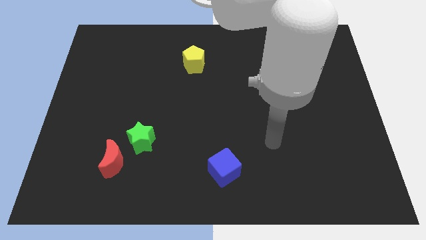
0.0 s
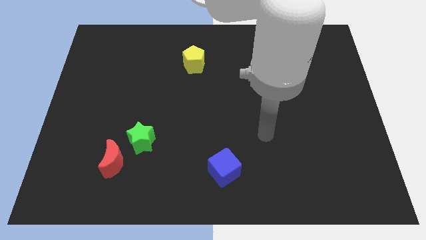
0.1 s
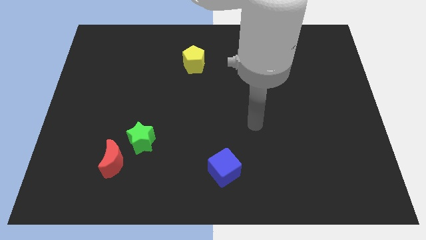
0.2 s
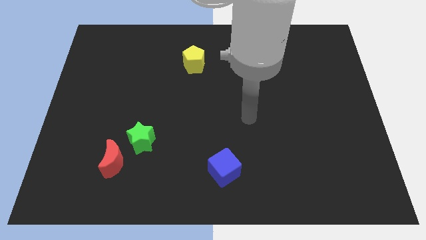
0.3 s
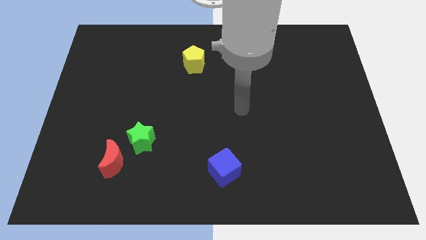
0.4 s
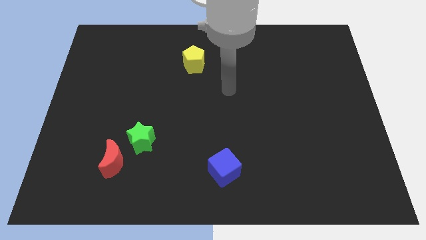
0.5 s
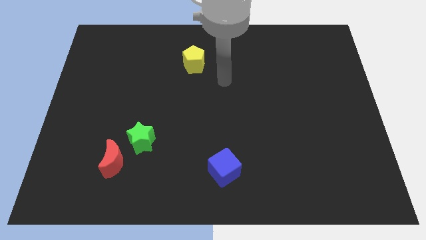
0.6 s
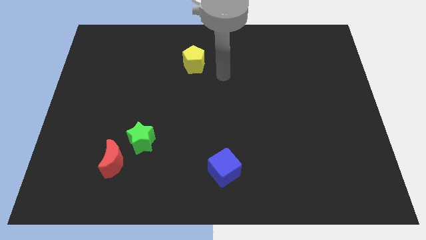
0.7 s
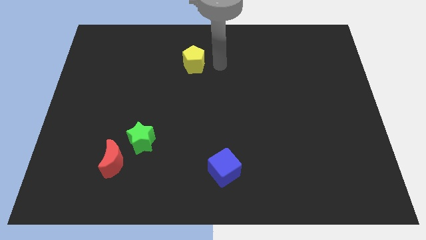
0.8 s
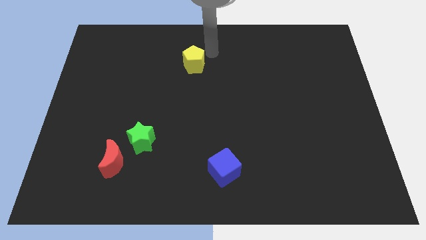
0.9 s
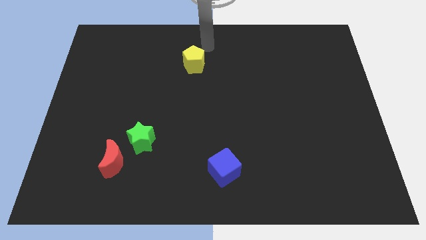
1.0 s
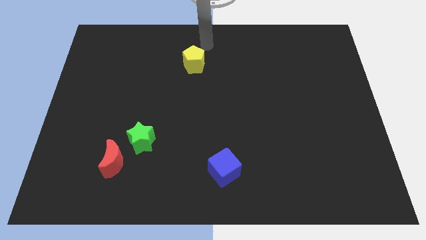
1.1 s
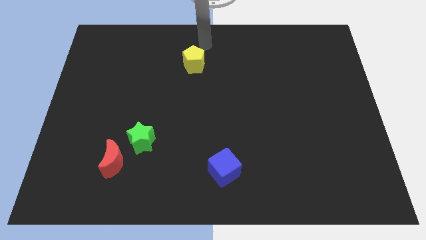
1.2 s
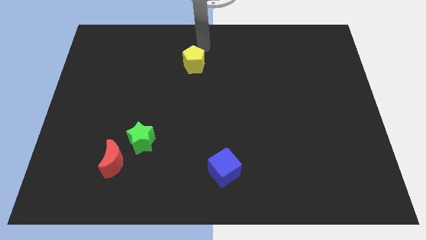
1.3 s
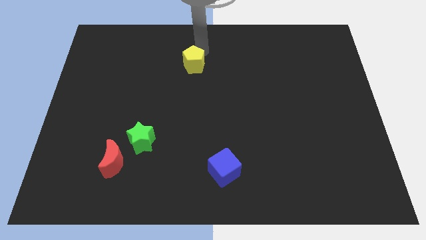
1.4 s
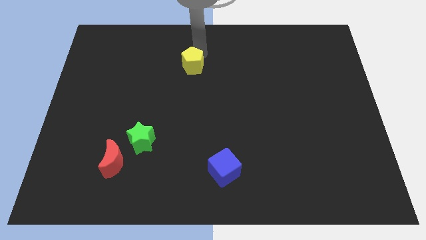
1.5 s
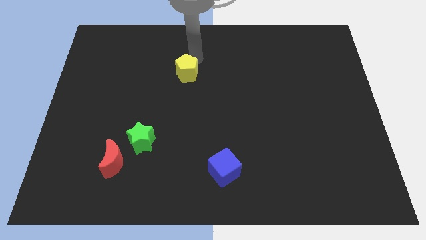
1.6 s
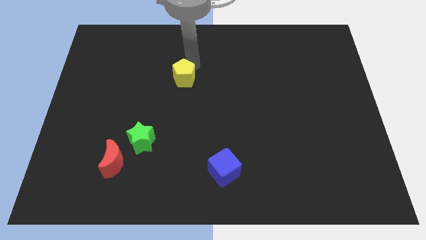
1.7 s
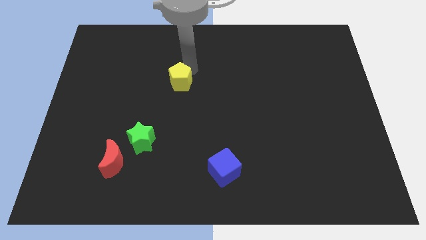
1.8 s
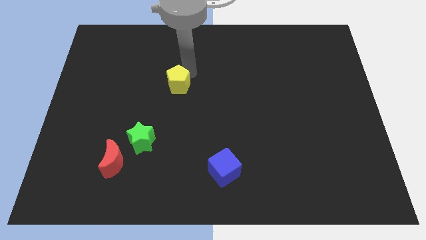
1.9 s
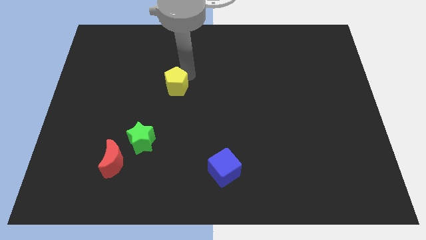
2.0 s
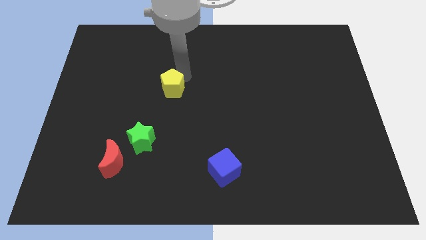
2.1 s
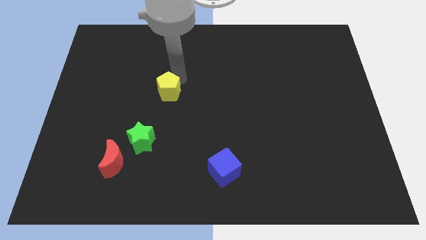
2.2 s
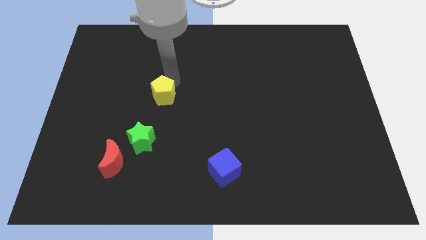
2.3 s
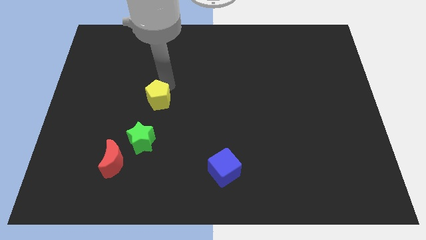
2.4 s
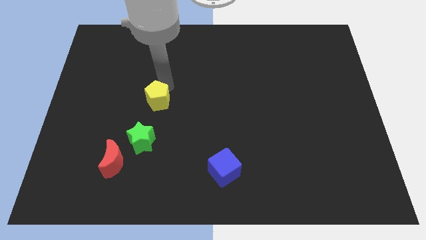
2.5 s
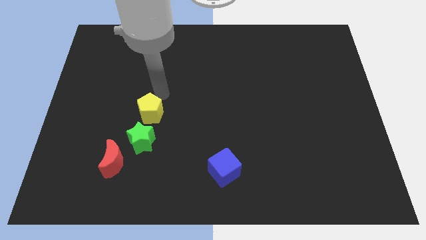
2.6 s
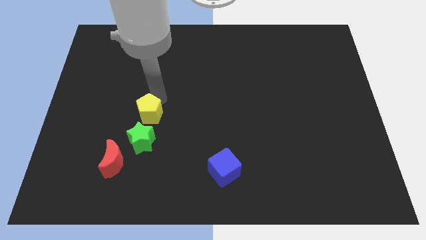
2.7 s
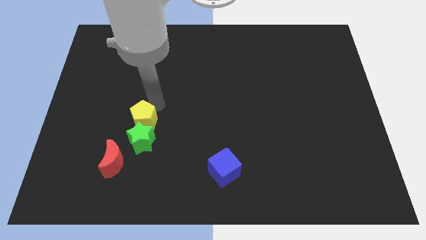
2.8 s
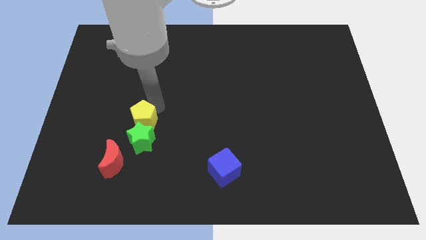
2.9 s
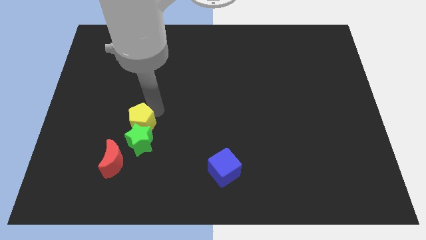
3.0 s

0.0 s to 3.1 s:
move the yellow block to the green star

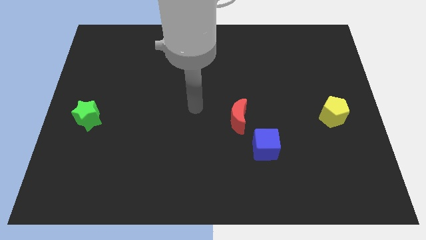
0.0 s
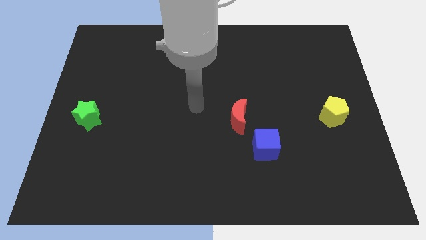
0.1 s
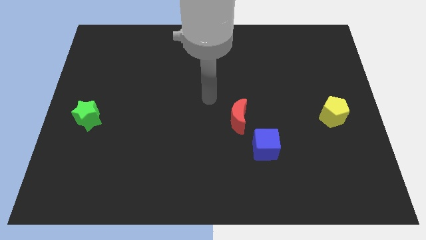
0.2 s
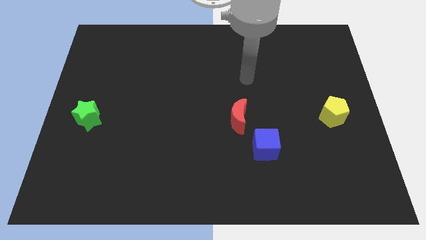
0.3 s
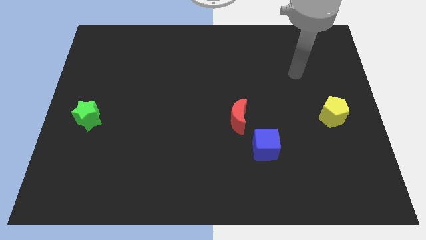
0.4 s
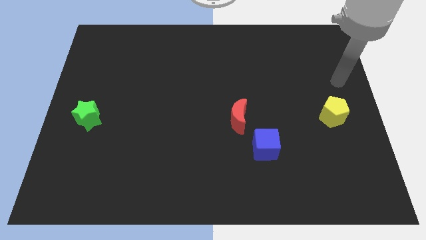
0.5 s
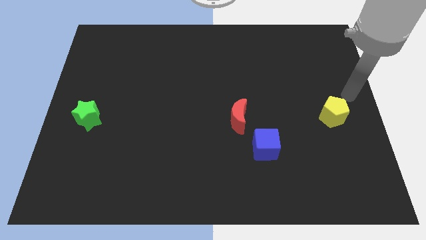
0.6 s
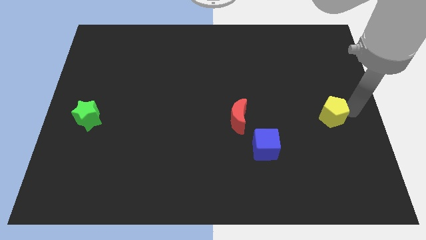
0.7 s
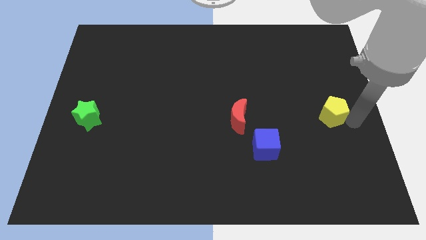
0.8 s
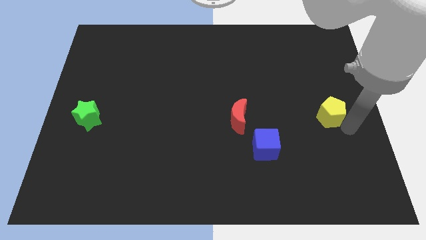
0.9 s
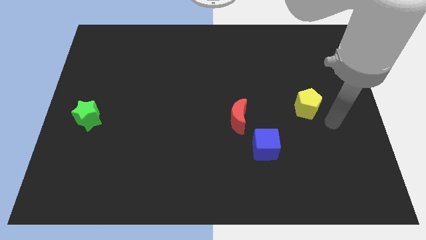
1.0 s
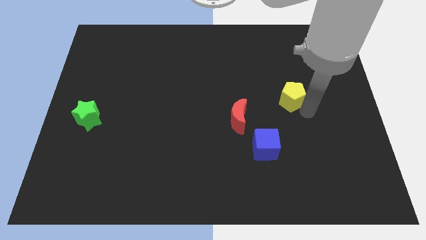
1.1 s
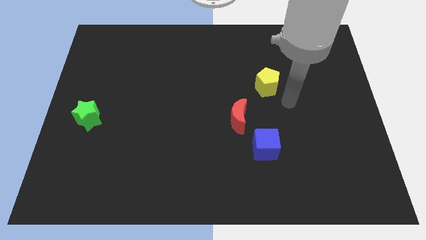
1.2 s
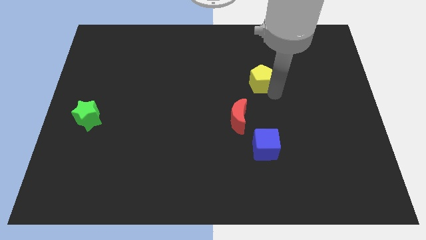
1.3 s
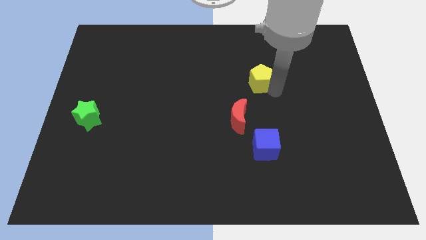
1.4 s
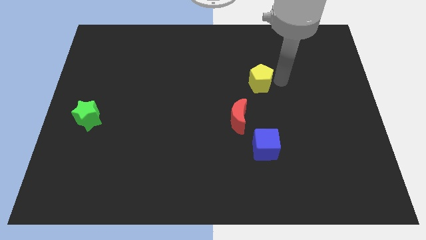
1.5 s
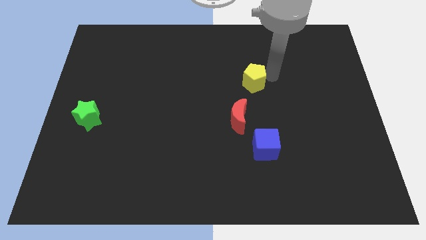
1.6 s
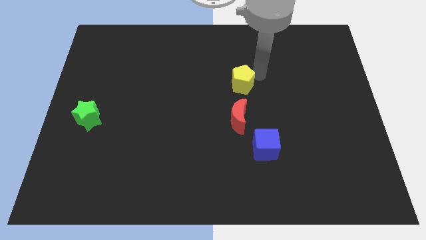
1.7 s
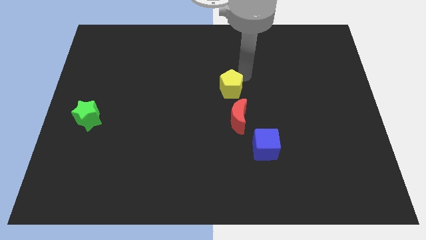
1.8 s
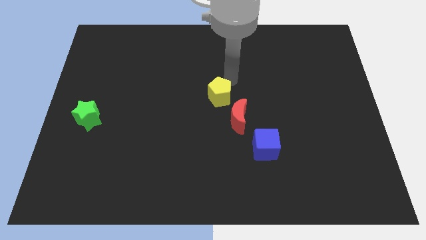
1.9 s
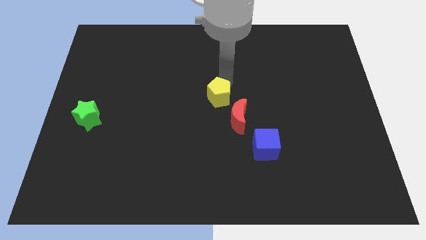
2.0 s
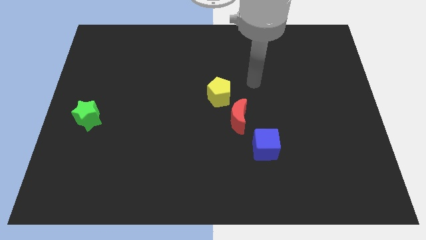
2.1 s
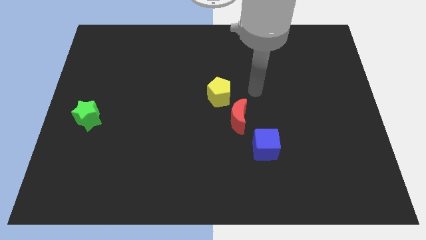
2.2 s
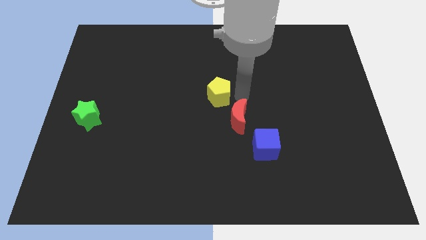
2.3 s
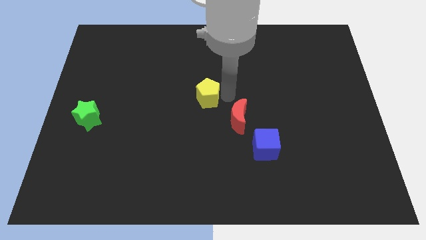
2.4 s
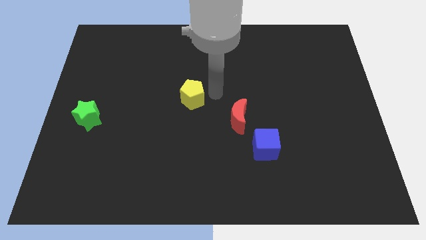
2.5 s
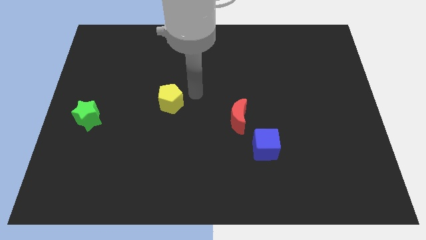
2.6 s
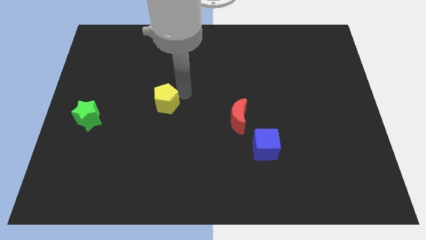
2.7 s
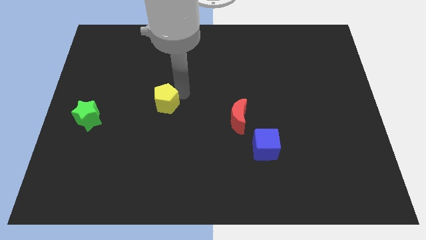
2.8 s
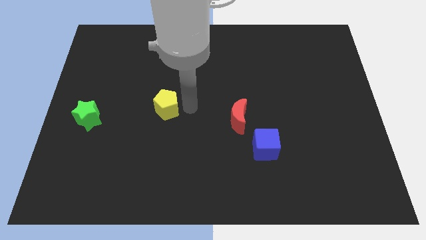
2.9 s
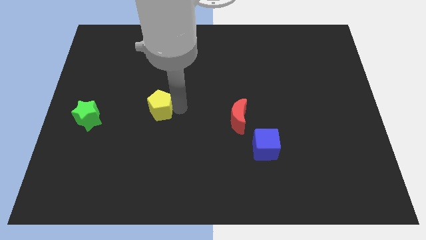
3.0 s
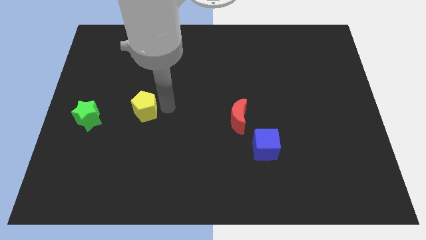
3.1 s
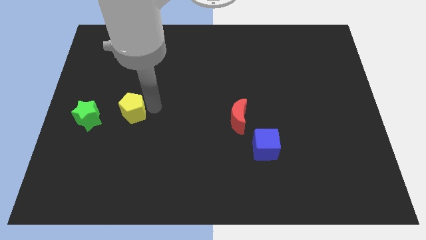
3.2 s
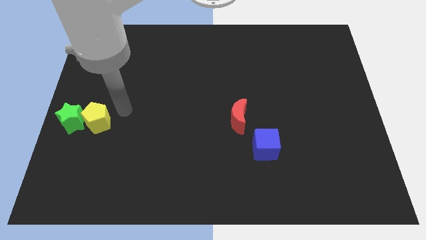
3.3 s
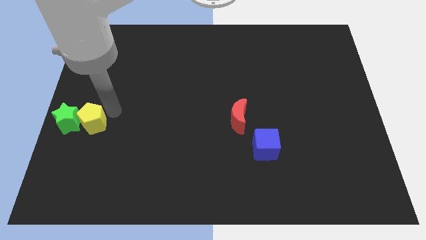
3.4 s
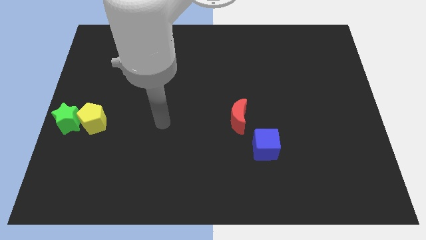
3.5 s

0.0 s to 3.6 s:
move the yellow pentagon close to the green block

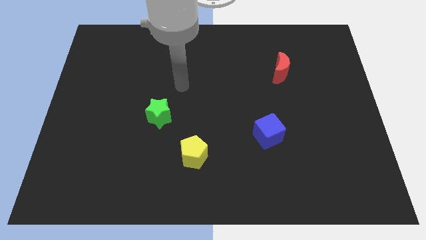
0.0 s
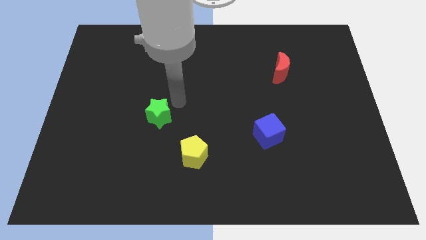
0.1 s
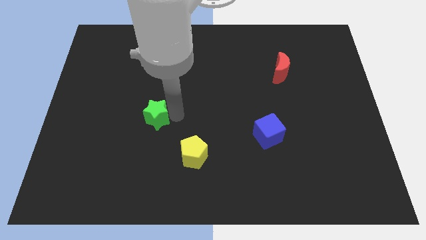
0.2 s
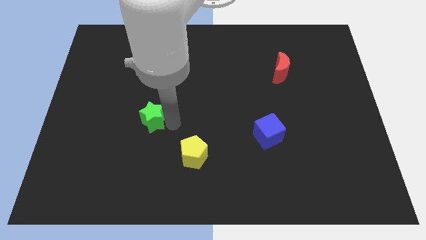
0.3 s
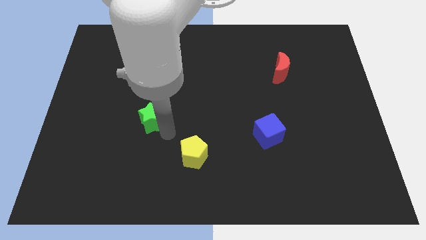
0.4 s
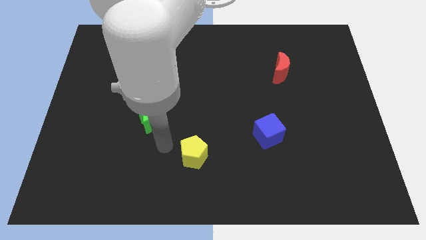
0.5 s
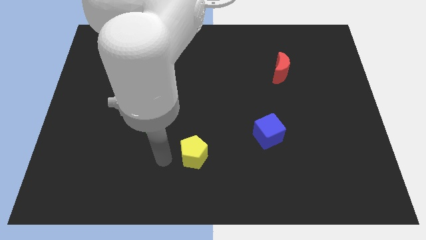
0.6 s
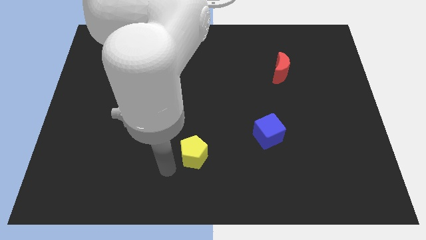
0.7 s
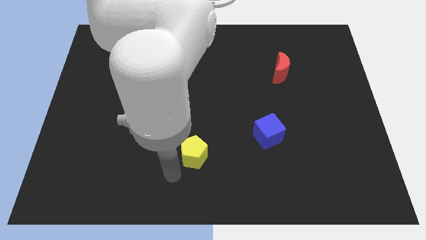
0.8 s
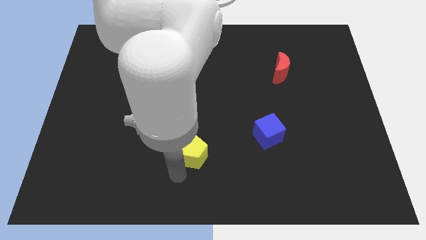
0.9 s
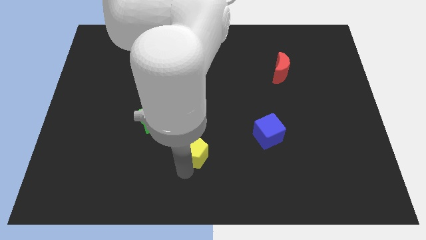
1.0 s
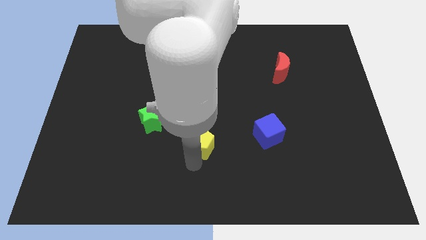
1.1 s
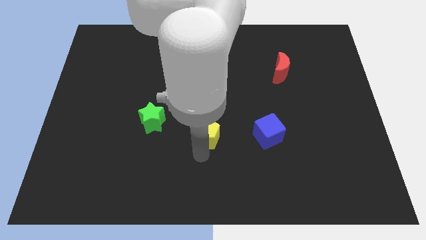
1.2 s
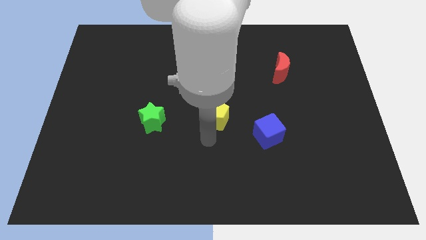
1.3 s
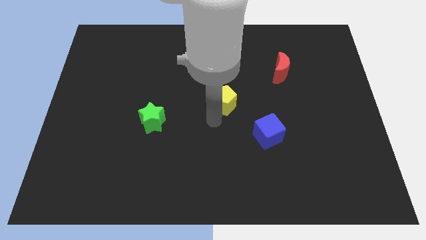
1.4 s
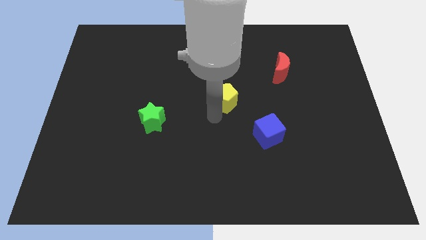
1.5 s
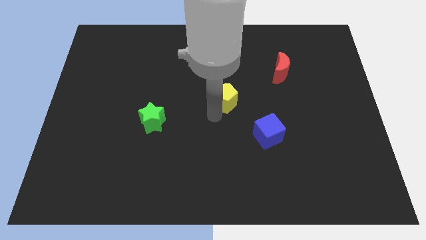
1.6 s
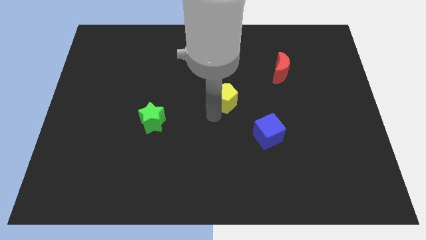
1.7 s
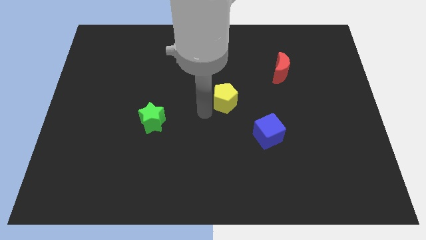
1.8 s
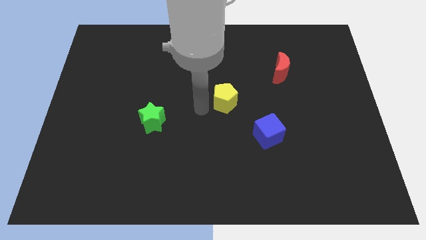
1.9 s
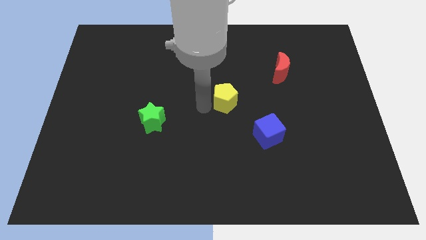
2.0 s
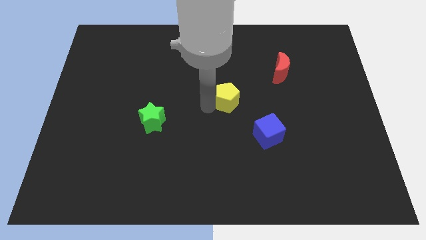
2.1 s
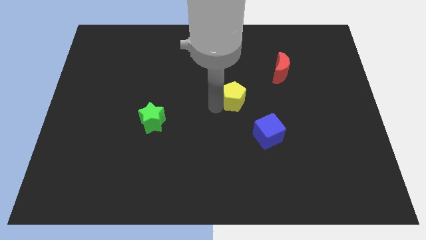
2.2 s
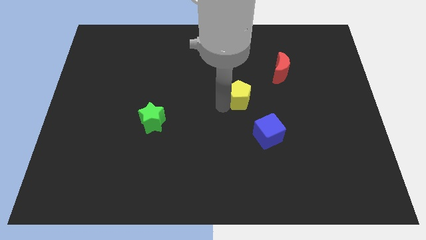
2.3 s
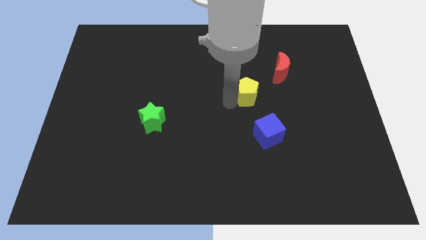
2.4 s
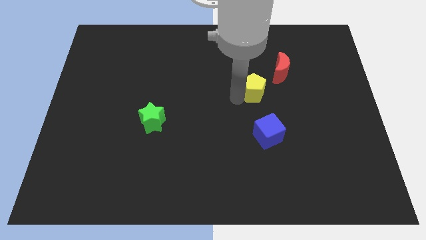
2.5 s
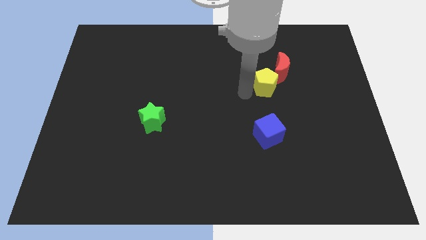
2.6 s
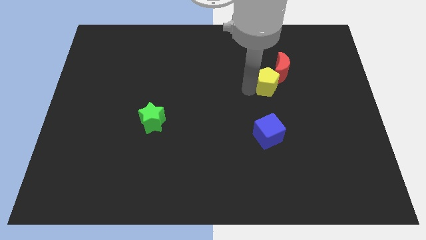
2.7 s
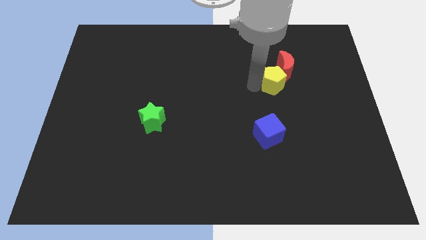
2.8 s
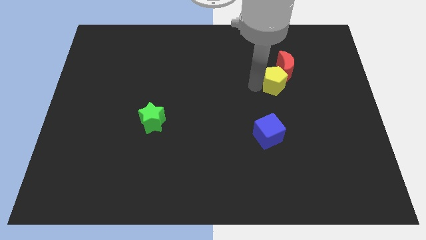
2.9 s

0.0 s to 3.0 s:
slide the yellow pentagon close to the red block
